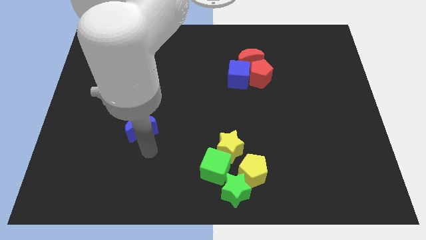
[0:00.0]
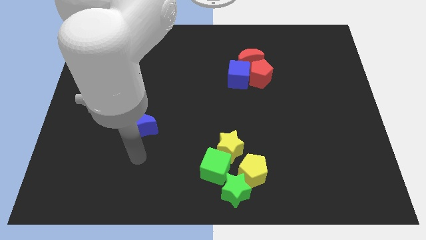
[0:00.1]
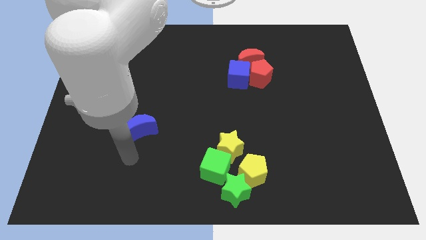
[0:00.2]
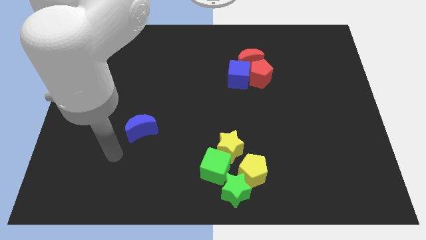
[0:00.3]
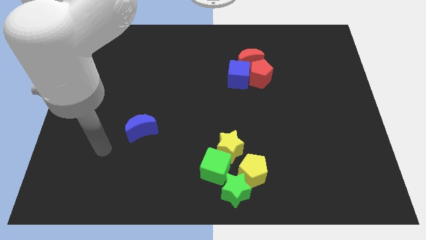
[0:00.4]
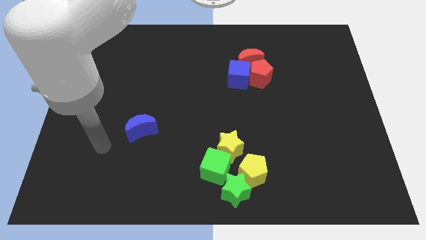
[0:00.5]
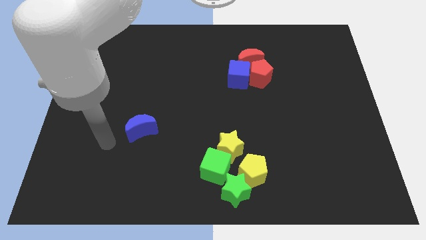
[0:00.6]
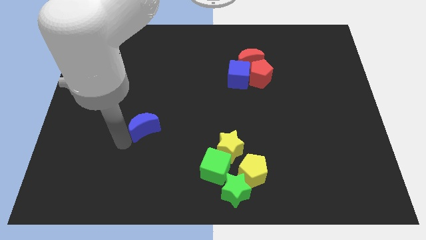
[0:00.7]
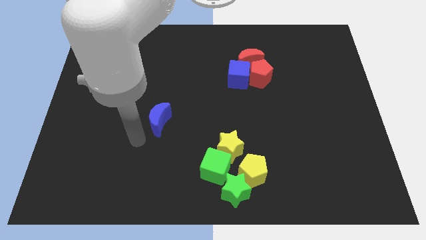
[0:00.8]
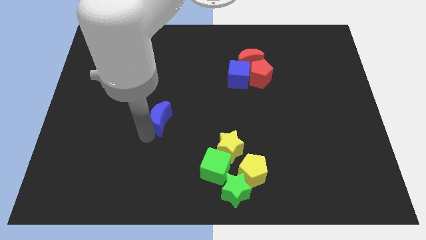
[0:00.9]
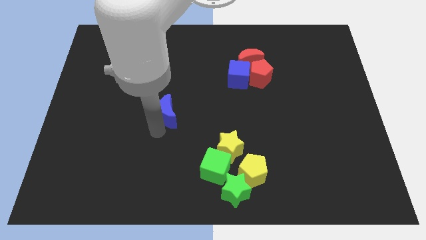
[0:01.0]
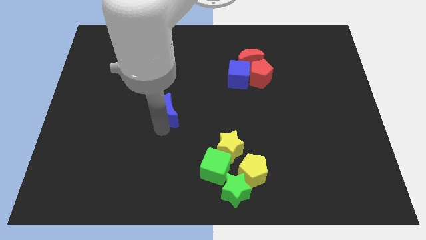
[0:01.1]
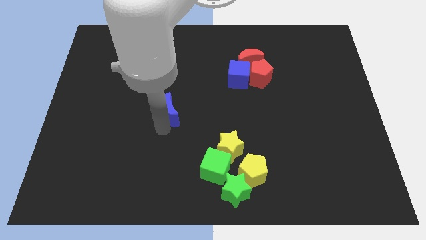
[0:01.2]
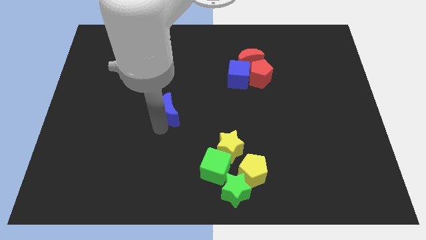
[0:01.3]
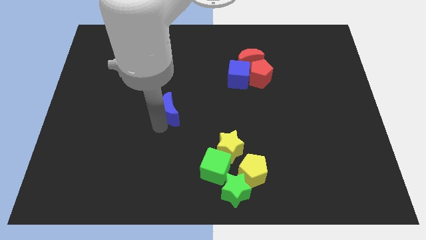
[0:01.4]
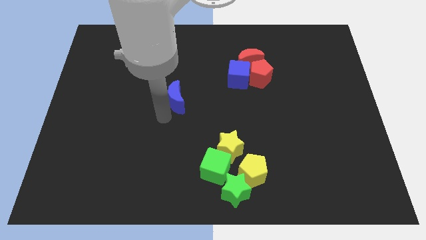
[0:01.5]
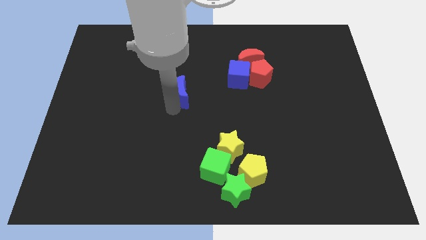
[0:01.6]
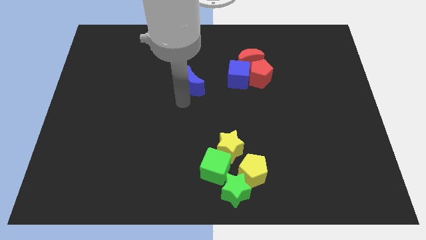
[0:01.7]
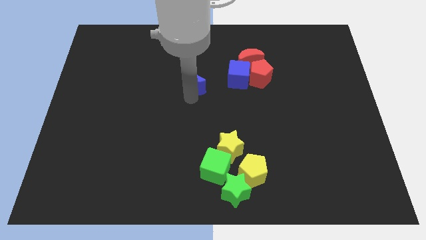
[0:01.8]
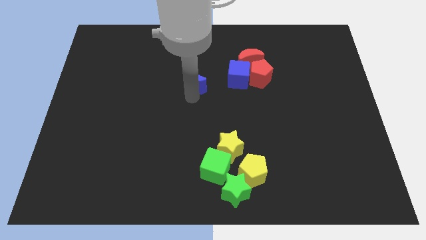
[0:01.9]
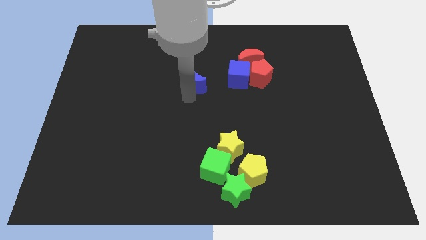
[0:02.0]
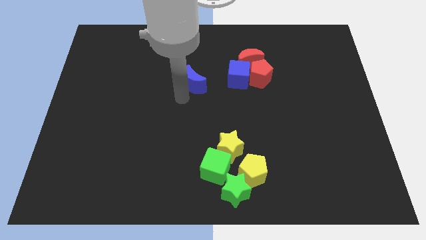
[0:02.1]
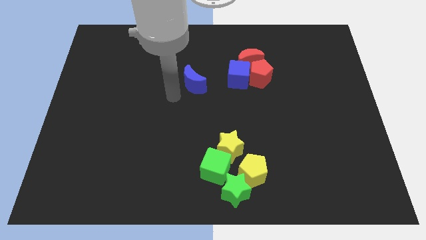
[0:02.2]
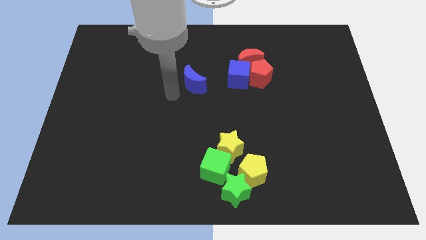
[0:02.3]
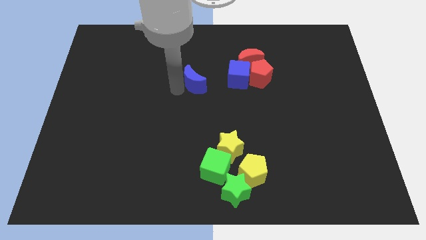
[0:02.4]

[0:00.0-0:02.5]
drag the blue crescent slightly left to blue cube

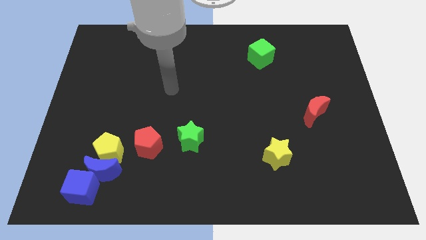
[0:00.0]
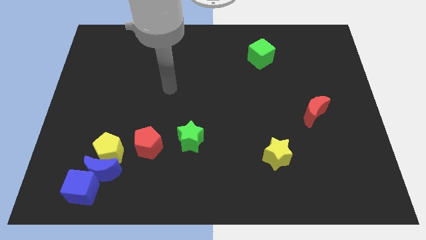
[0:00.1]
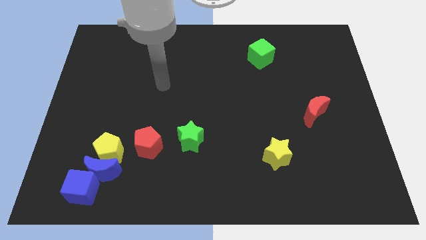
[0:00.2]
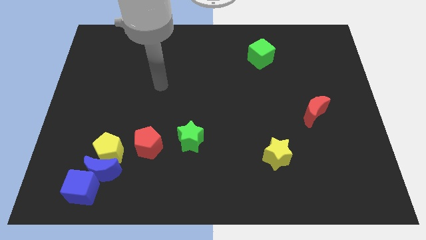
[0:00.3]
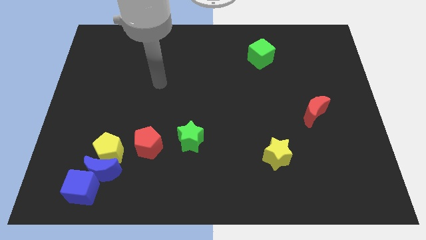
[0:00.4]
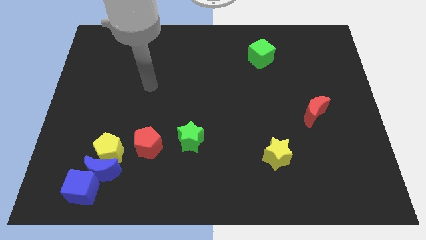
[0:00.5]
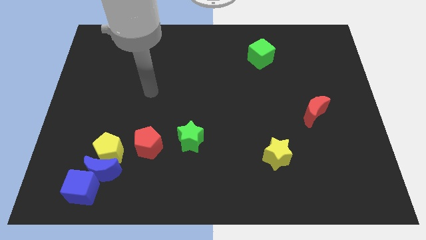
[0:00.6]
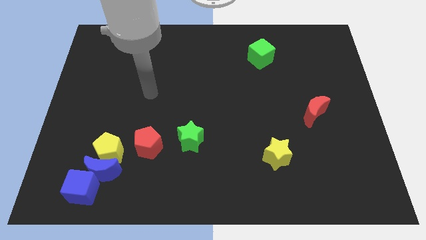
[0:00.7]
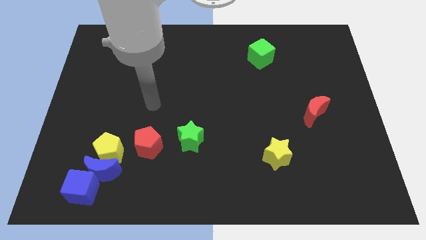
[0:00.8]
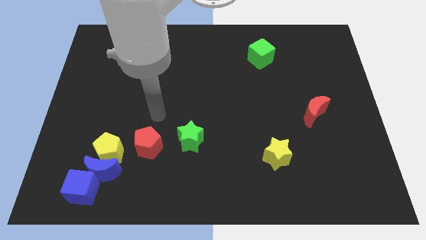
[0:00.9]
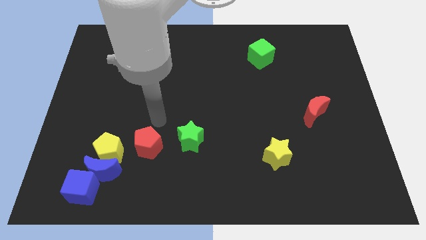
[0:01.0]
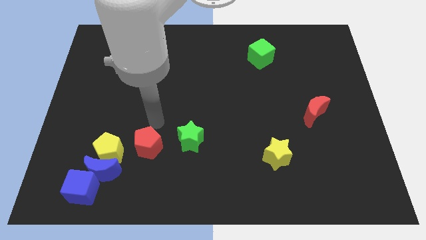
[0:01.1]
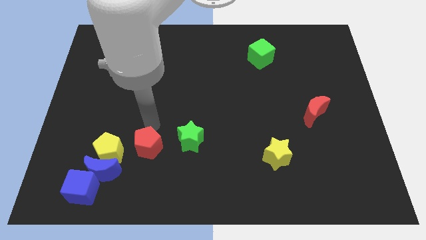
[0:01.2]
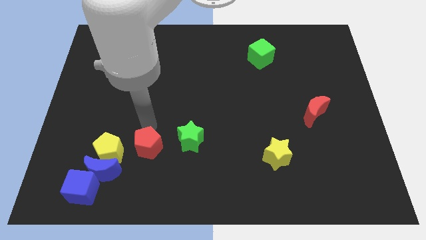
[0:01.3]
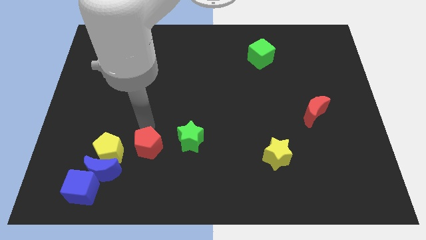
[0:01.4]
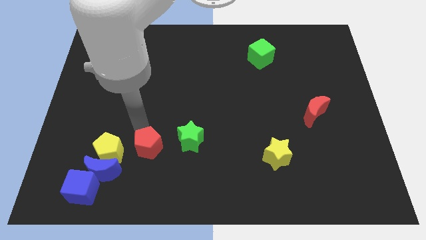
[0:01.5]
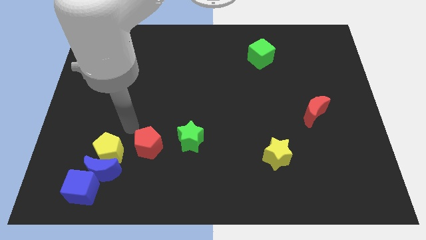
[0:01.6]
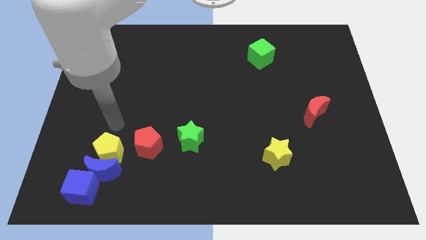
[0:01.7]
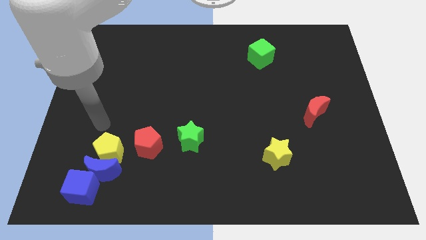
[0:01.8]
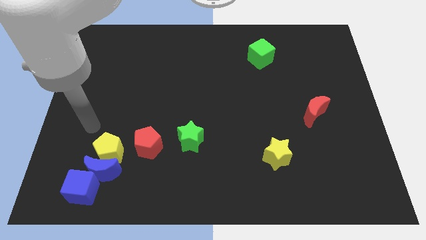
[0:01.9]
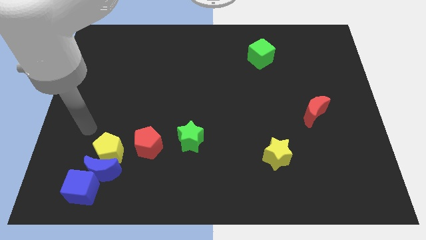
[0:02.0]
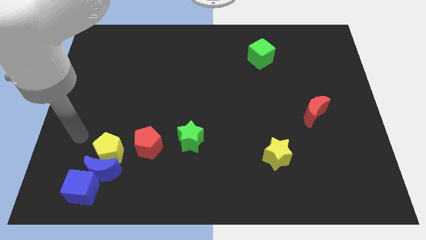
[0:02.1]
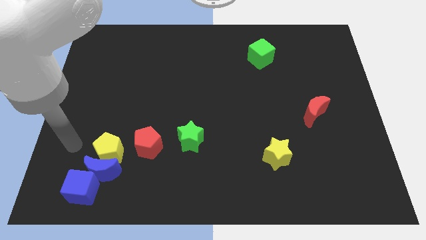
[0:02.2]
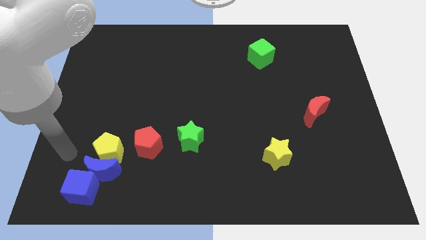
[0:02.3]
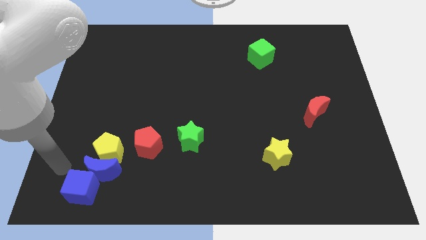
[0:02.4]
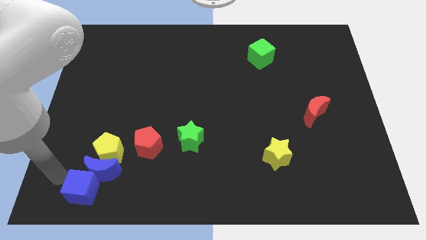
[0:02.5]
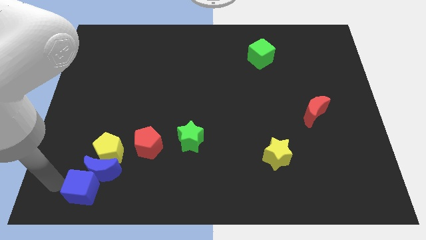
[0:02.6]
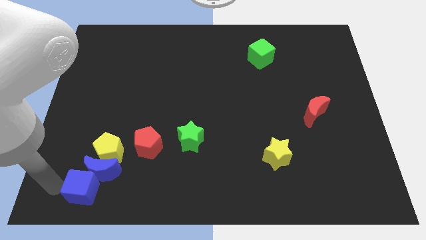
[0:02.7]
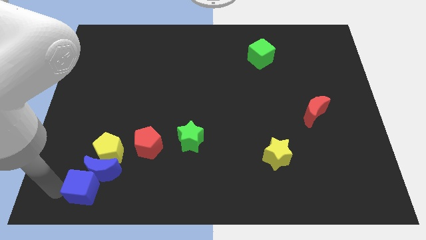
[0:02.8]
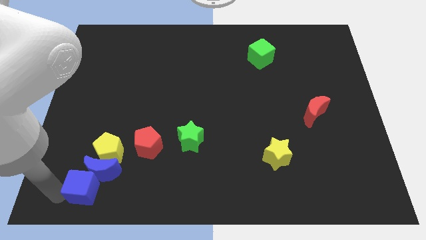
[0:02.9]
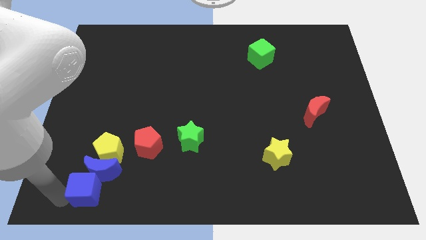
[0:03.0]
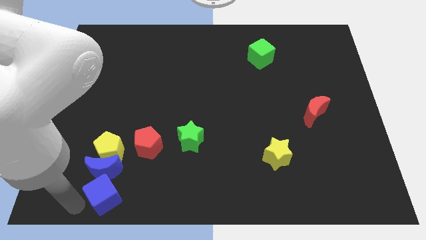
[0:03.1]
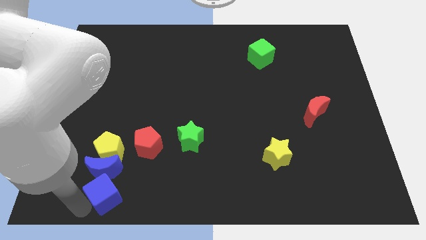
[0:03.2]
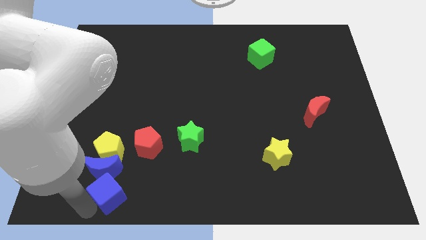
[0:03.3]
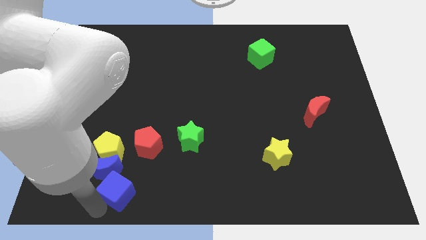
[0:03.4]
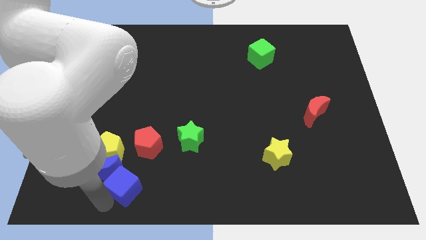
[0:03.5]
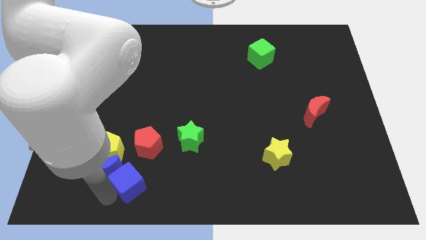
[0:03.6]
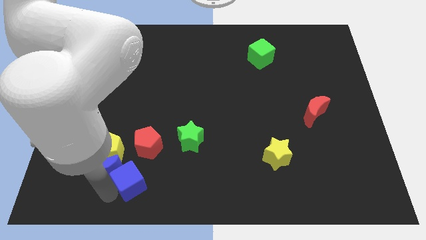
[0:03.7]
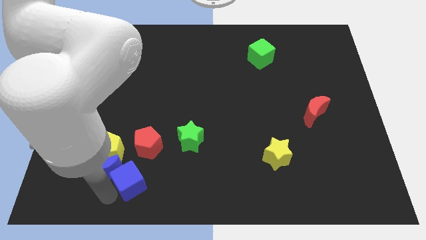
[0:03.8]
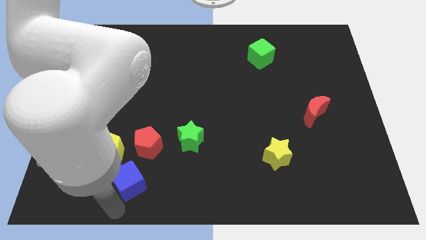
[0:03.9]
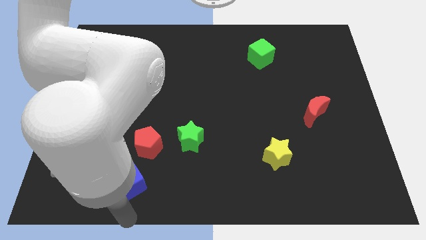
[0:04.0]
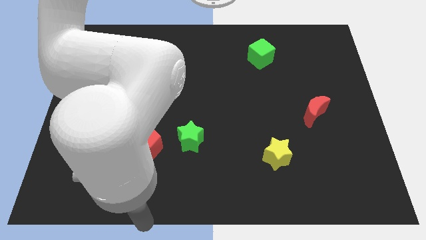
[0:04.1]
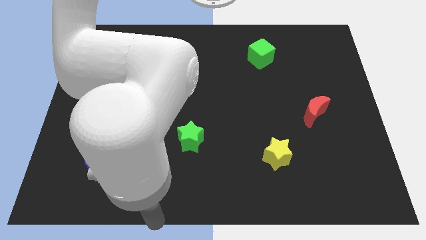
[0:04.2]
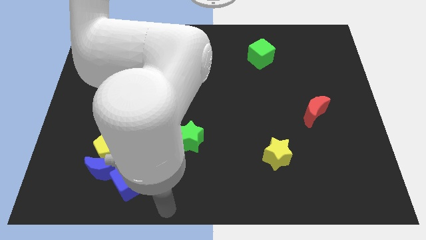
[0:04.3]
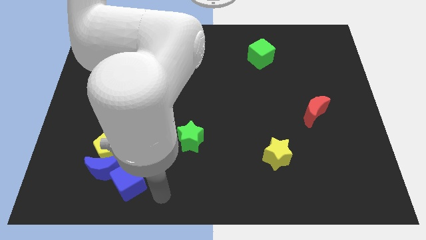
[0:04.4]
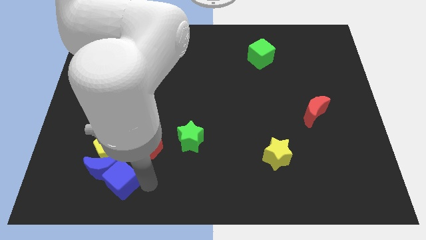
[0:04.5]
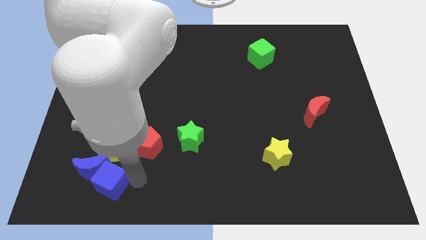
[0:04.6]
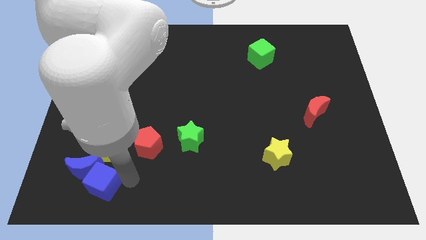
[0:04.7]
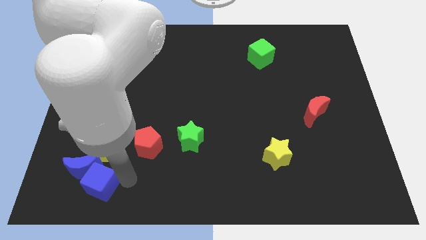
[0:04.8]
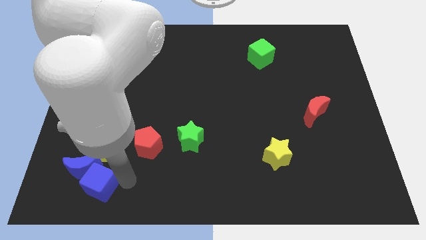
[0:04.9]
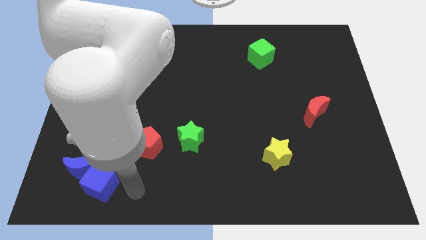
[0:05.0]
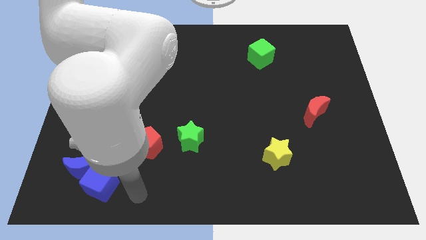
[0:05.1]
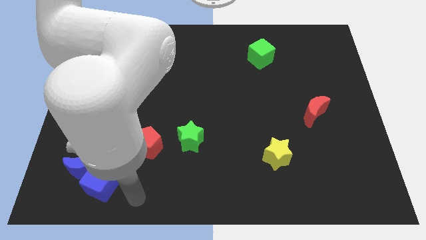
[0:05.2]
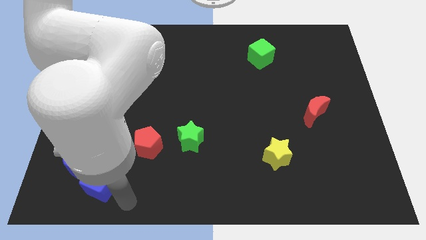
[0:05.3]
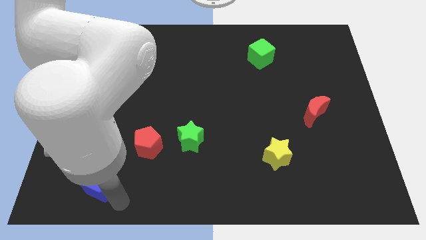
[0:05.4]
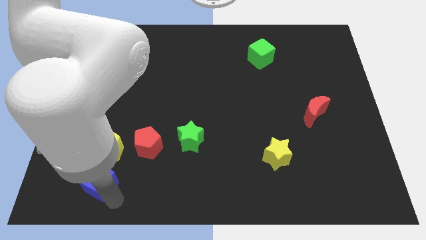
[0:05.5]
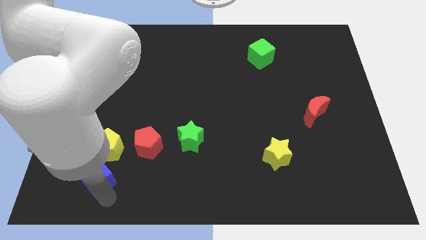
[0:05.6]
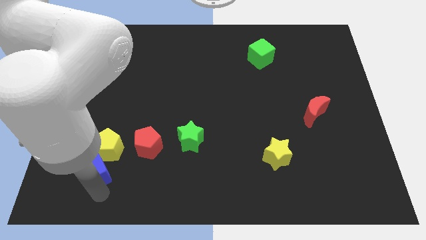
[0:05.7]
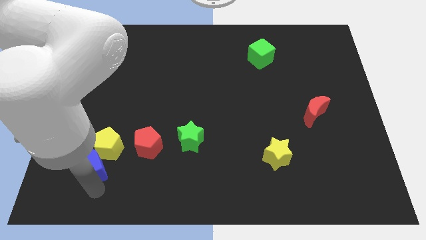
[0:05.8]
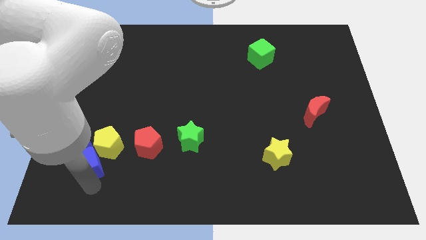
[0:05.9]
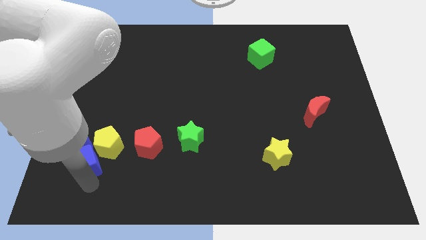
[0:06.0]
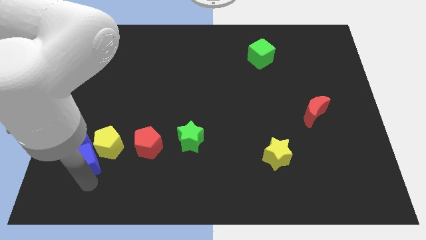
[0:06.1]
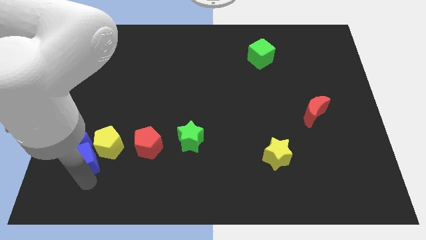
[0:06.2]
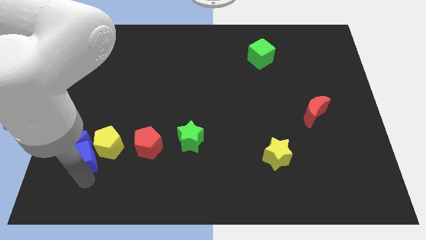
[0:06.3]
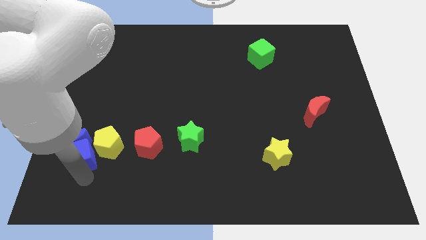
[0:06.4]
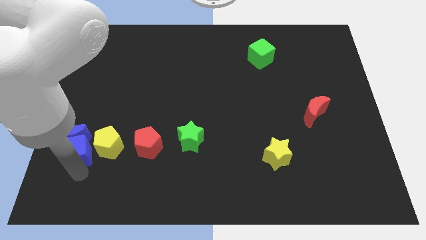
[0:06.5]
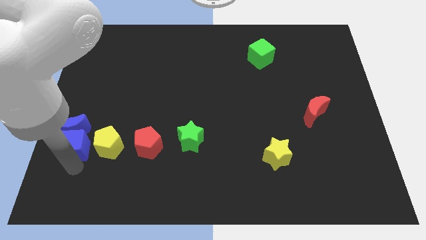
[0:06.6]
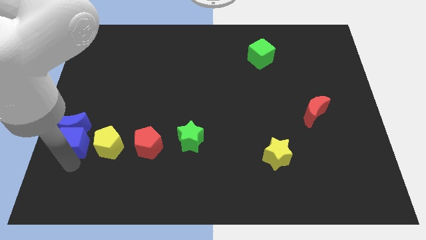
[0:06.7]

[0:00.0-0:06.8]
move the blue blocks to the left of the yellow pentagon
